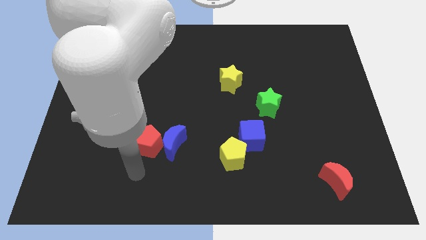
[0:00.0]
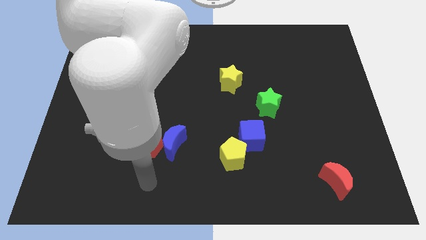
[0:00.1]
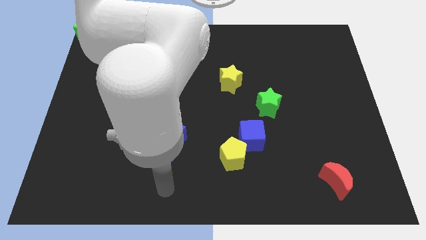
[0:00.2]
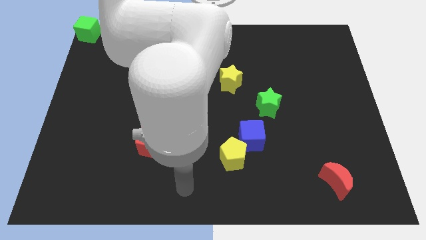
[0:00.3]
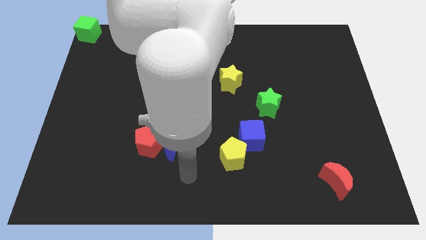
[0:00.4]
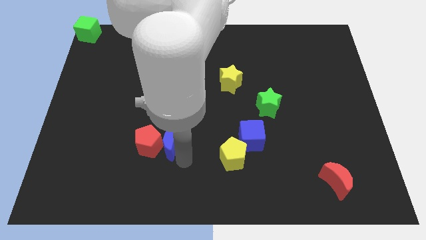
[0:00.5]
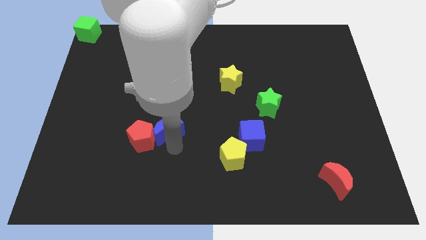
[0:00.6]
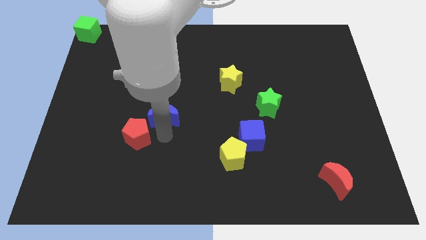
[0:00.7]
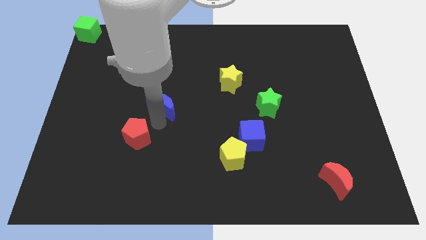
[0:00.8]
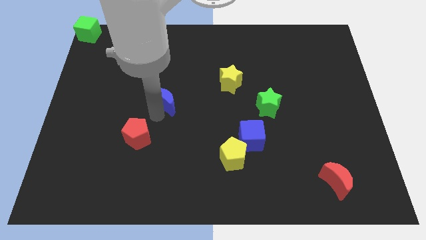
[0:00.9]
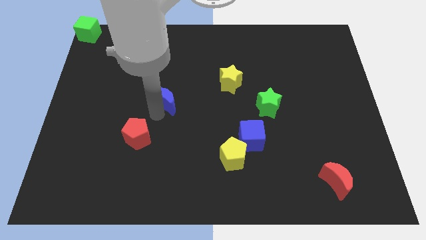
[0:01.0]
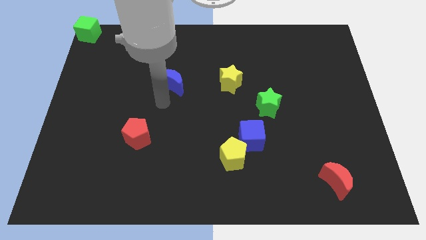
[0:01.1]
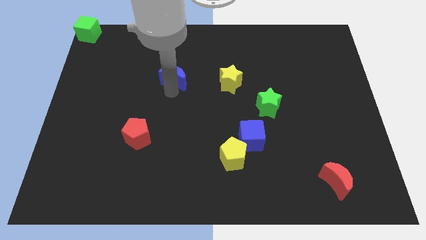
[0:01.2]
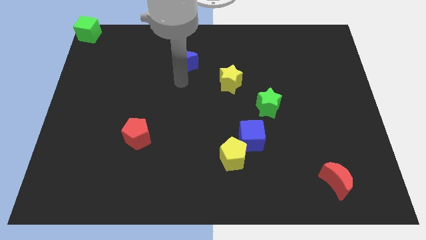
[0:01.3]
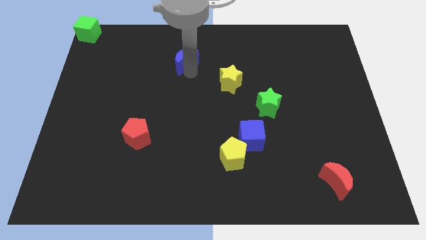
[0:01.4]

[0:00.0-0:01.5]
separate the blue moon from the red pentagon

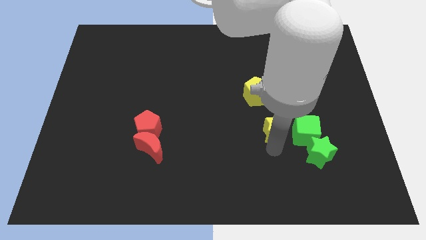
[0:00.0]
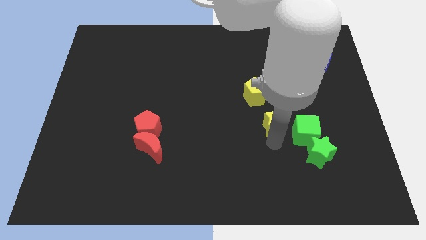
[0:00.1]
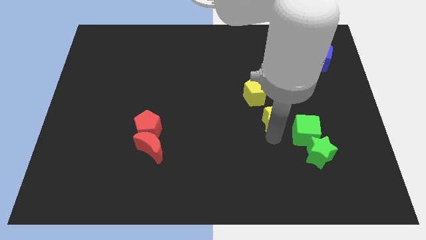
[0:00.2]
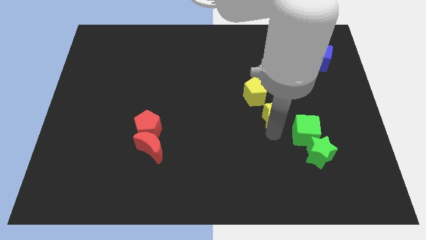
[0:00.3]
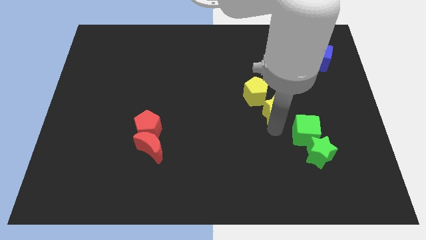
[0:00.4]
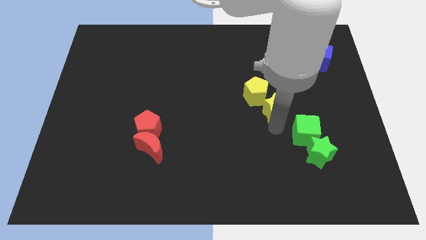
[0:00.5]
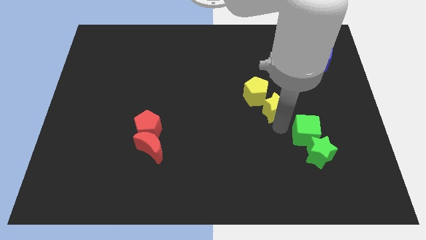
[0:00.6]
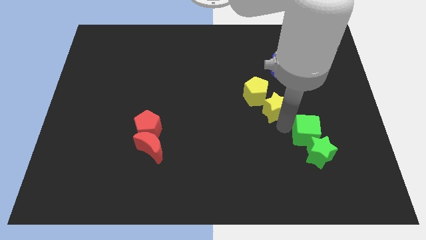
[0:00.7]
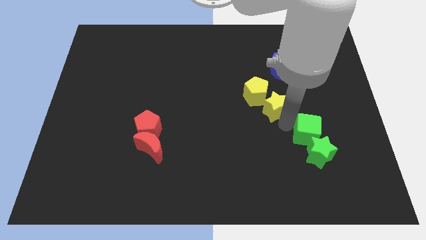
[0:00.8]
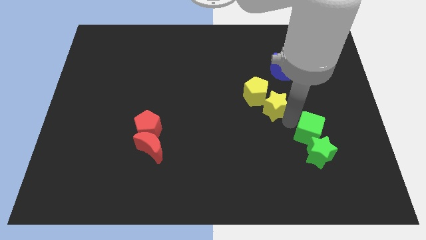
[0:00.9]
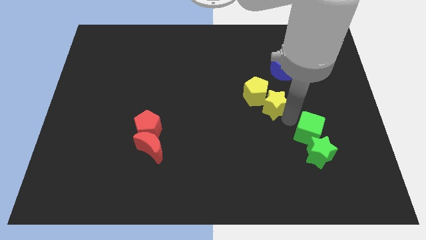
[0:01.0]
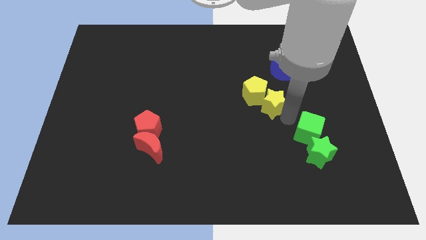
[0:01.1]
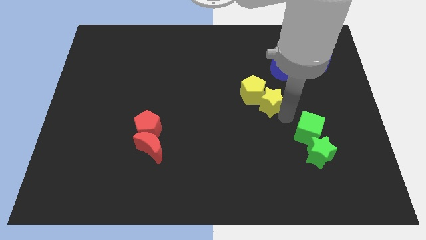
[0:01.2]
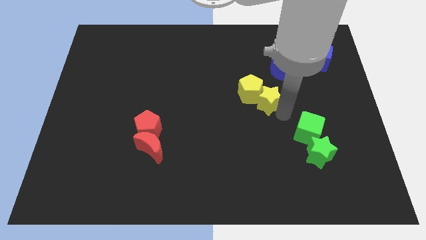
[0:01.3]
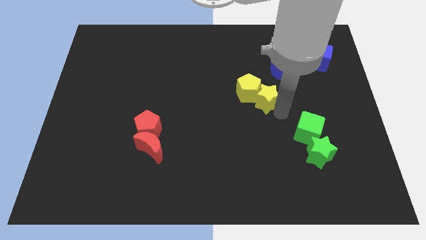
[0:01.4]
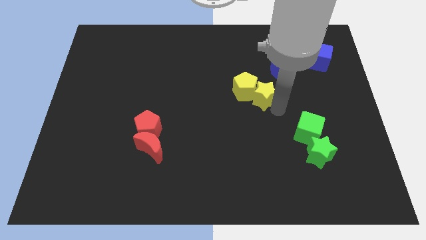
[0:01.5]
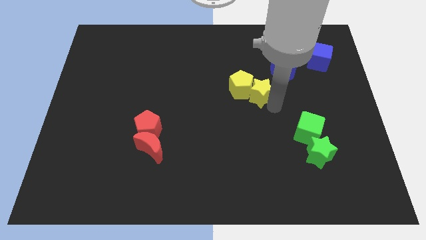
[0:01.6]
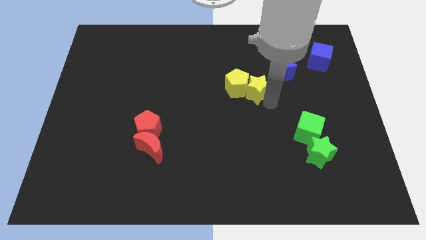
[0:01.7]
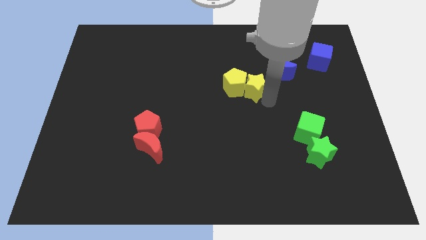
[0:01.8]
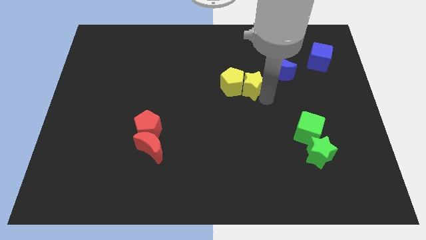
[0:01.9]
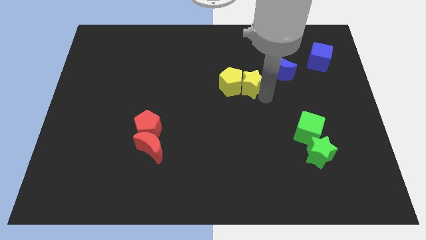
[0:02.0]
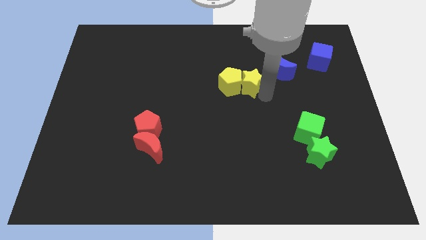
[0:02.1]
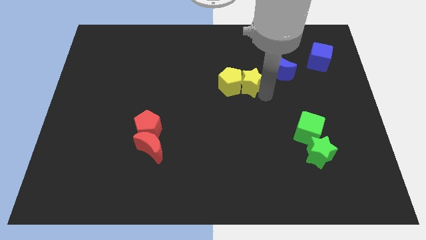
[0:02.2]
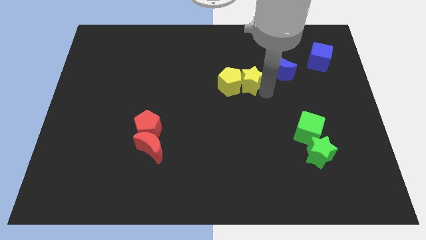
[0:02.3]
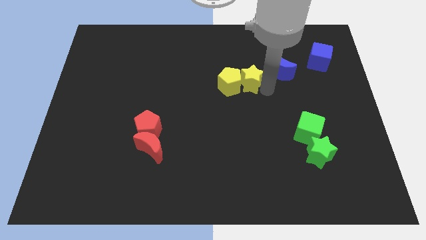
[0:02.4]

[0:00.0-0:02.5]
move yellow star into yellow pentagon

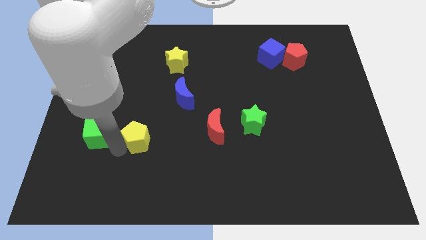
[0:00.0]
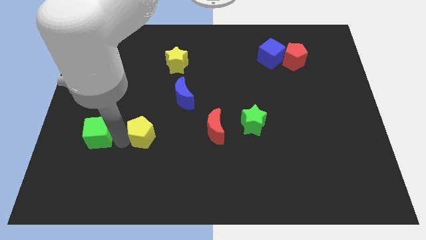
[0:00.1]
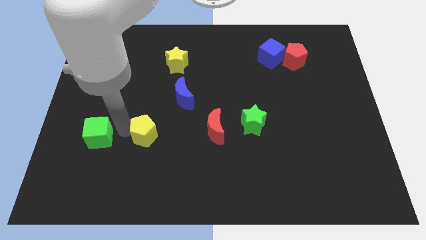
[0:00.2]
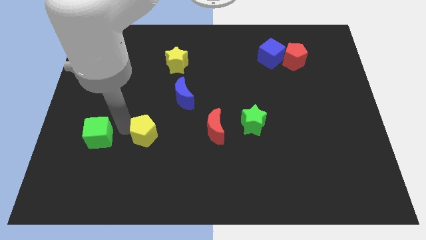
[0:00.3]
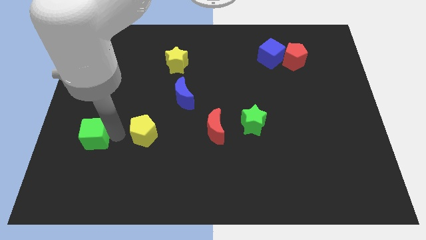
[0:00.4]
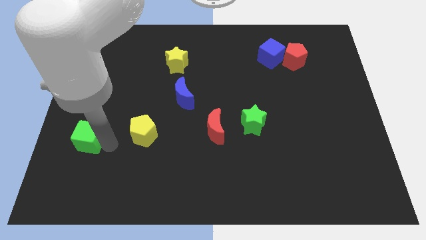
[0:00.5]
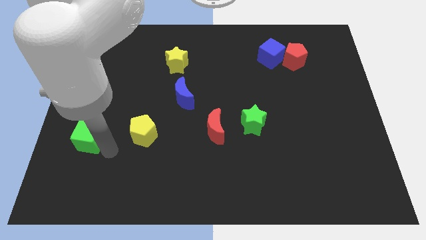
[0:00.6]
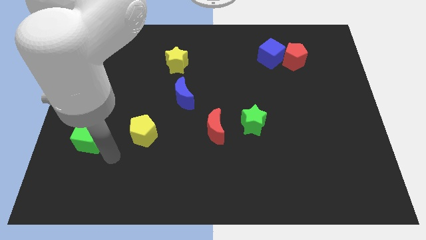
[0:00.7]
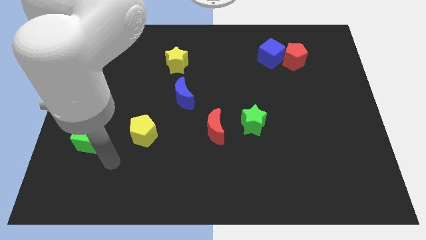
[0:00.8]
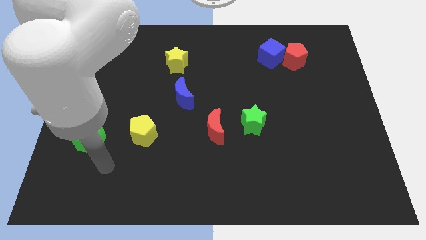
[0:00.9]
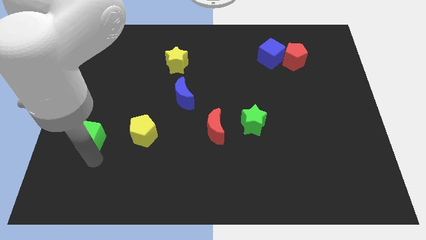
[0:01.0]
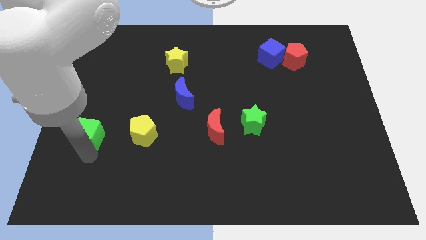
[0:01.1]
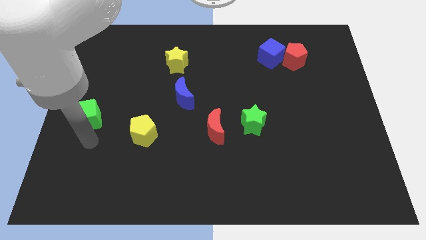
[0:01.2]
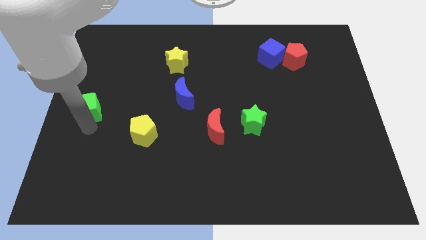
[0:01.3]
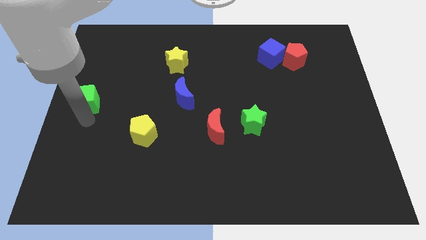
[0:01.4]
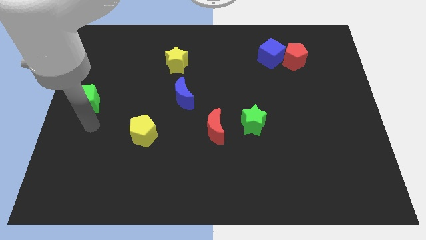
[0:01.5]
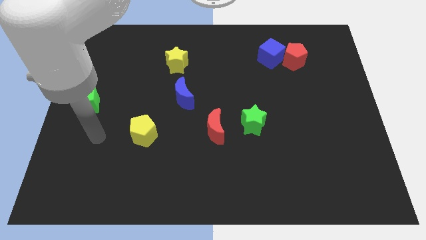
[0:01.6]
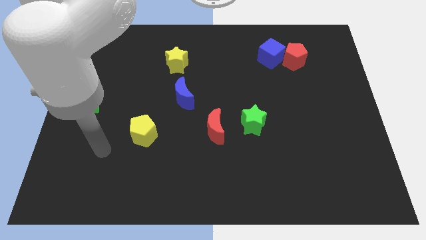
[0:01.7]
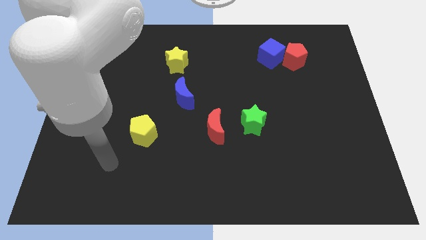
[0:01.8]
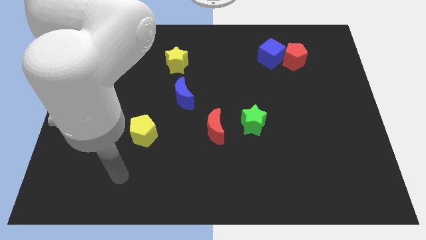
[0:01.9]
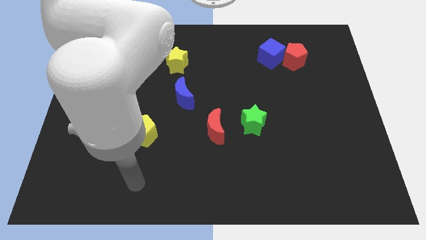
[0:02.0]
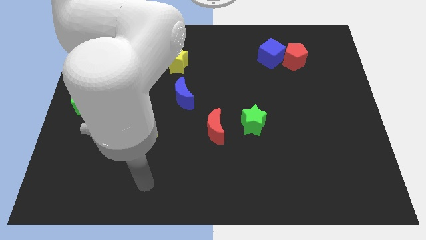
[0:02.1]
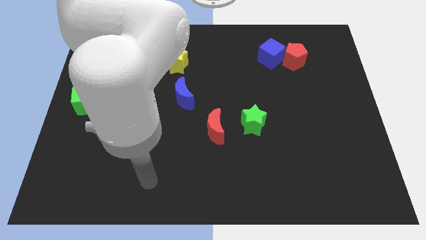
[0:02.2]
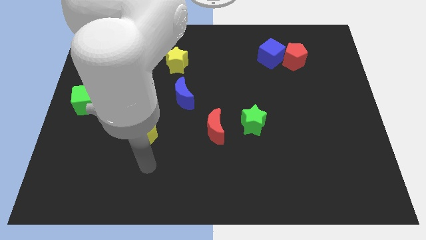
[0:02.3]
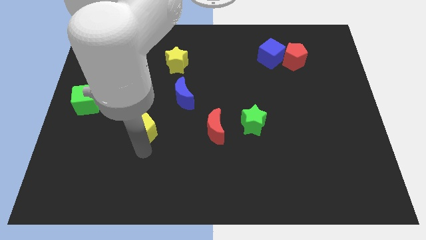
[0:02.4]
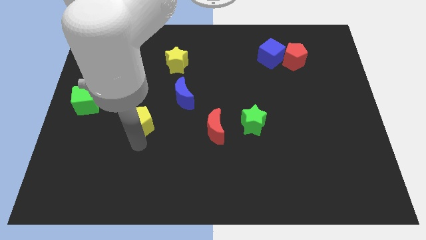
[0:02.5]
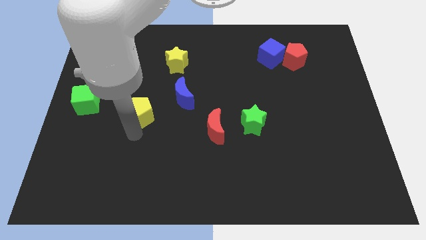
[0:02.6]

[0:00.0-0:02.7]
push the green cube slightly towards the top

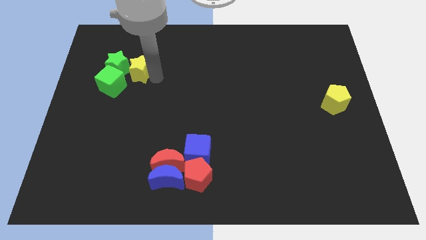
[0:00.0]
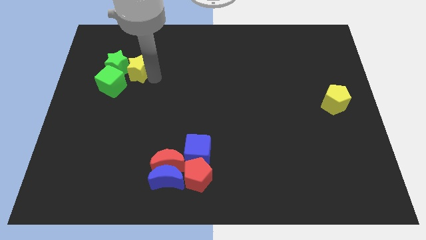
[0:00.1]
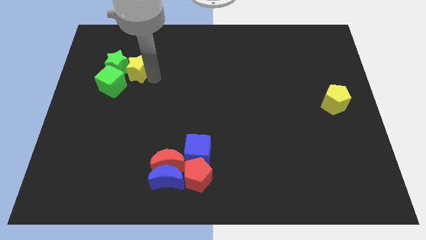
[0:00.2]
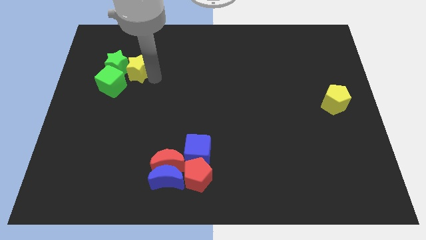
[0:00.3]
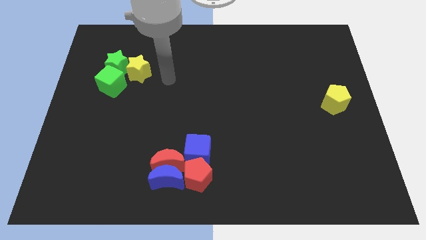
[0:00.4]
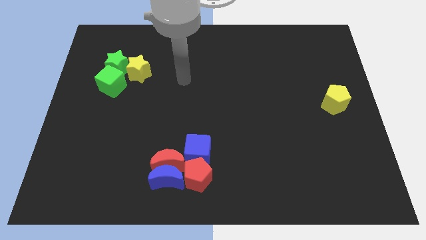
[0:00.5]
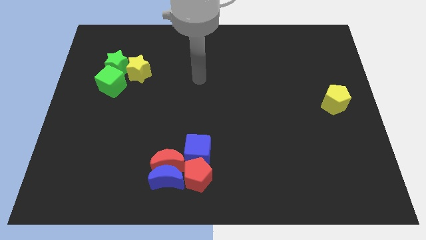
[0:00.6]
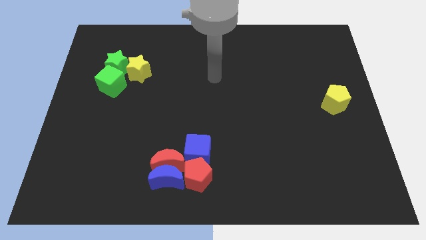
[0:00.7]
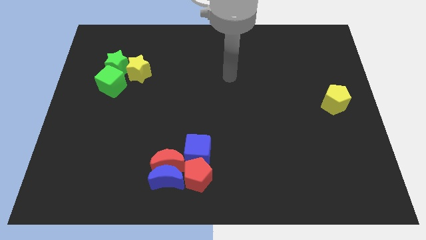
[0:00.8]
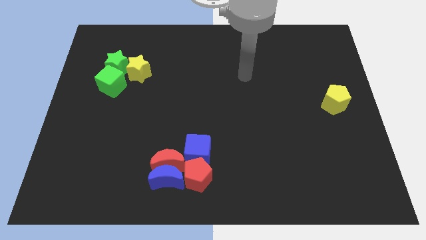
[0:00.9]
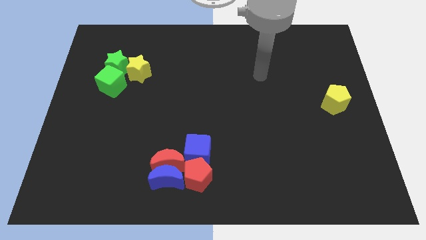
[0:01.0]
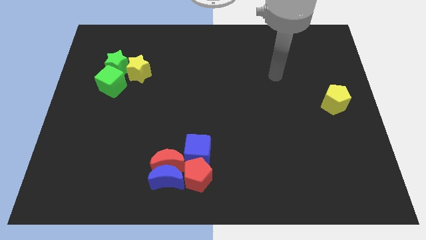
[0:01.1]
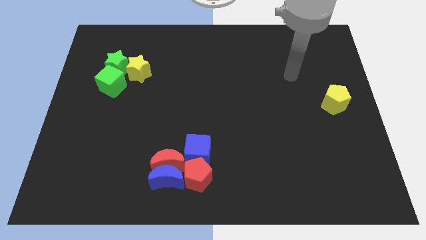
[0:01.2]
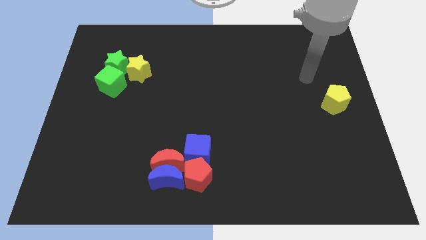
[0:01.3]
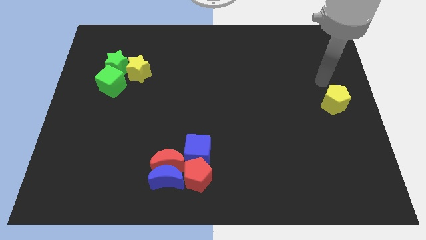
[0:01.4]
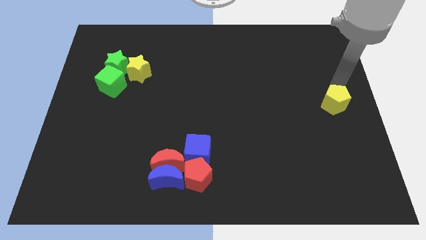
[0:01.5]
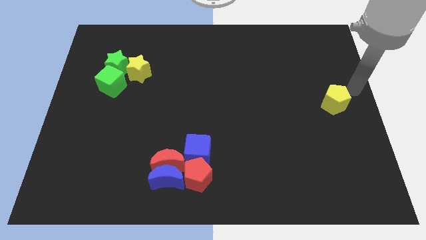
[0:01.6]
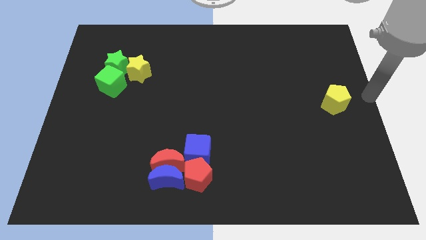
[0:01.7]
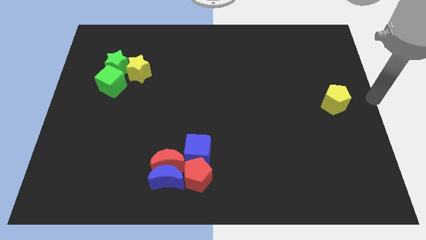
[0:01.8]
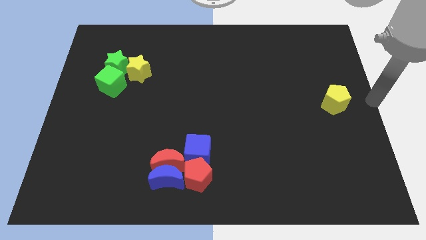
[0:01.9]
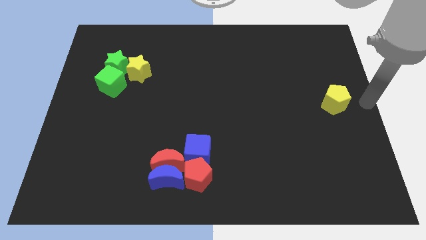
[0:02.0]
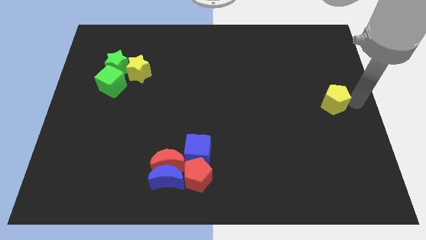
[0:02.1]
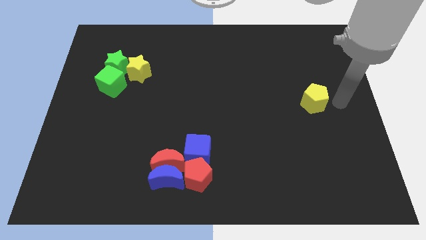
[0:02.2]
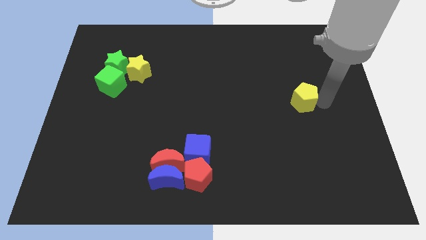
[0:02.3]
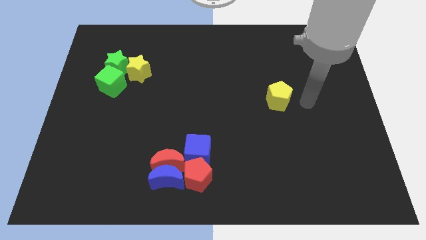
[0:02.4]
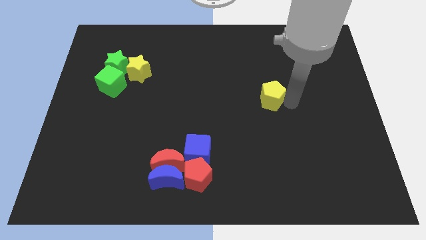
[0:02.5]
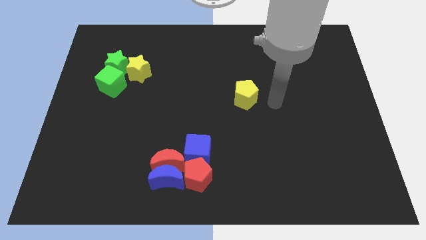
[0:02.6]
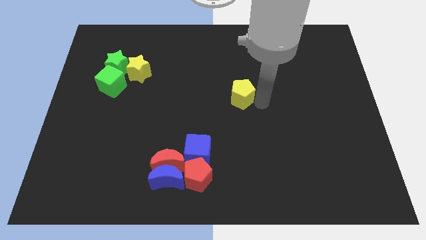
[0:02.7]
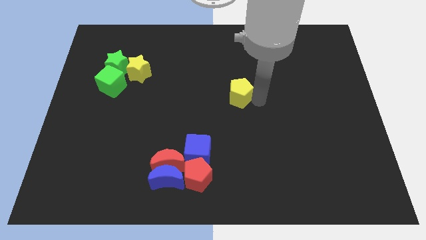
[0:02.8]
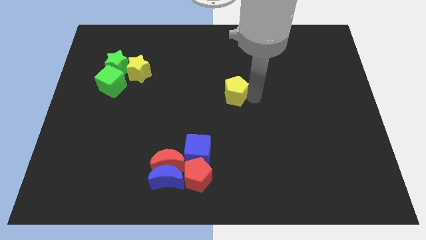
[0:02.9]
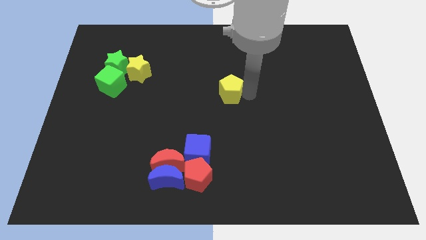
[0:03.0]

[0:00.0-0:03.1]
move the arm away from the yellow star
